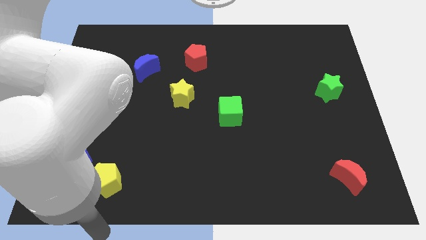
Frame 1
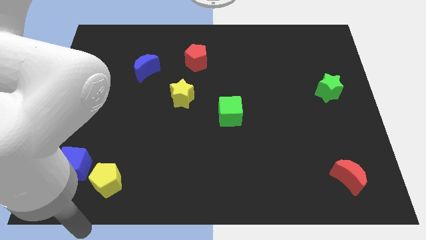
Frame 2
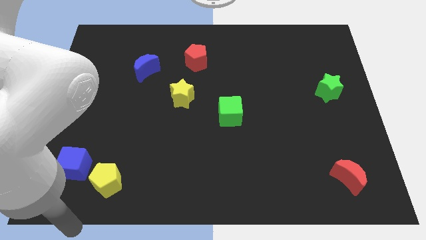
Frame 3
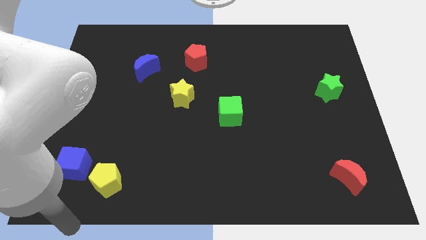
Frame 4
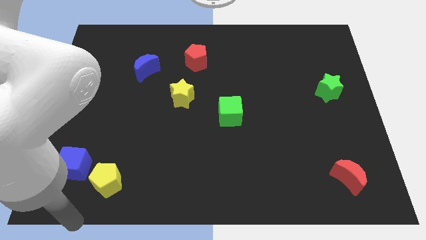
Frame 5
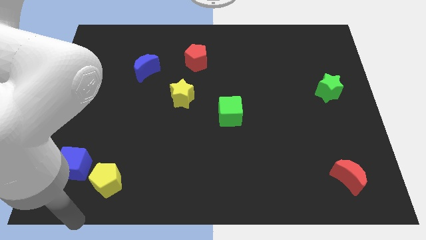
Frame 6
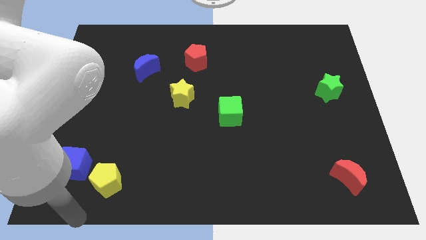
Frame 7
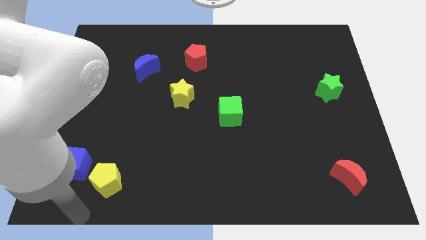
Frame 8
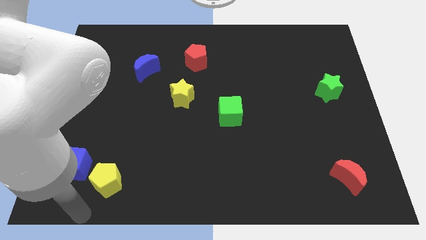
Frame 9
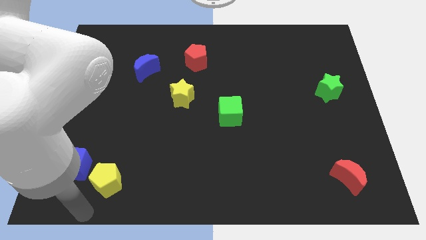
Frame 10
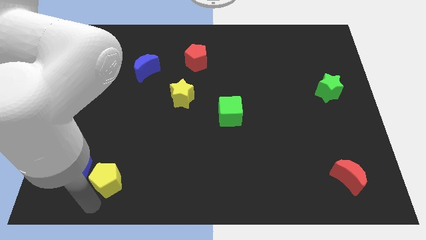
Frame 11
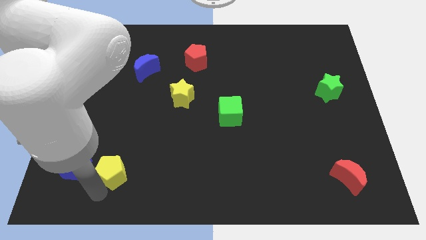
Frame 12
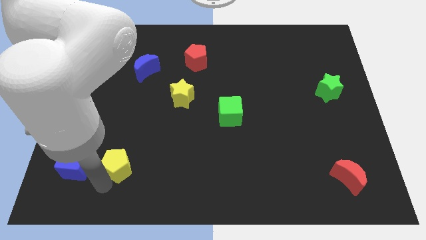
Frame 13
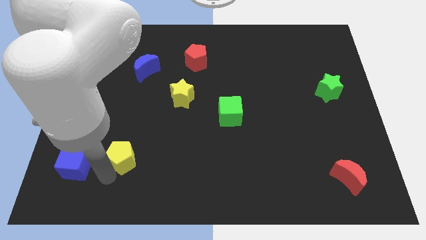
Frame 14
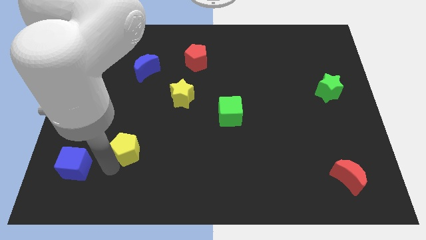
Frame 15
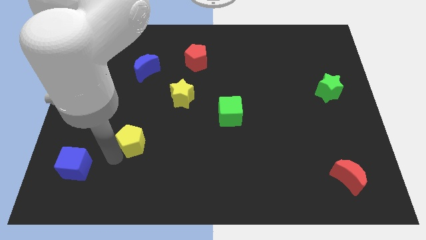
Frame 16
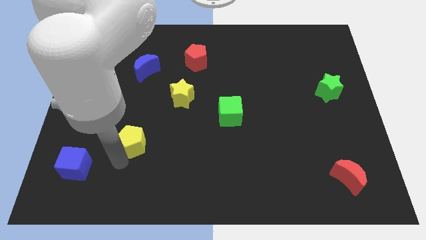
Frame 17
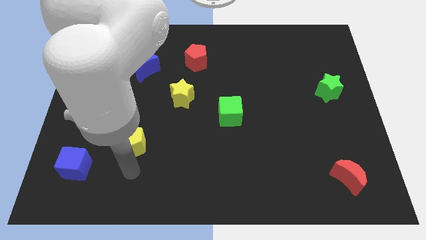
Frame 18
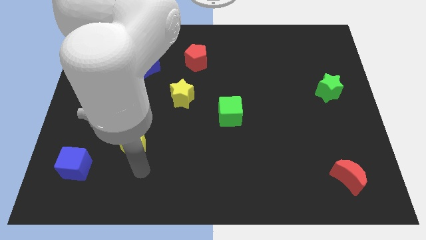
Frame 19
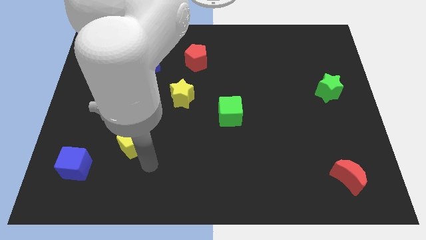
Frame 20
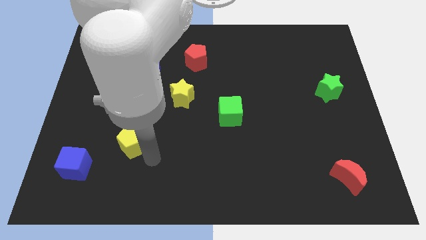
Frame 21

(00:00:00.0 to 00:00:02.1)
push the yellow pentagon towards up

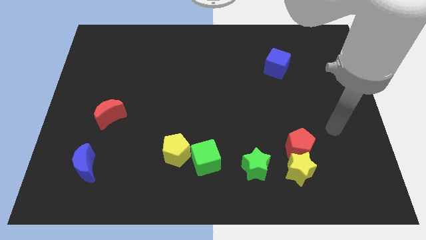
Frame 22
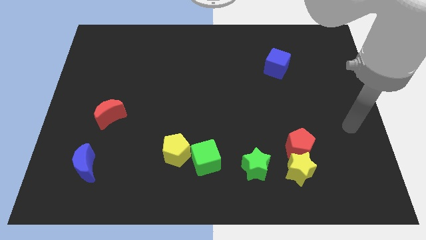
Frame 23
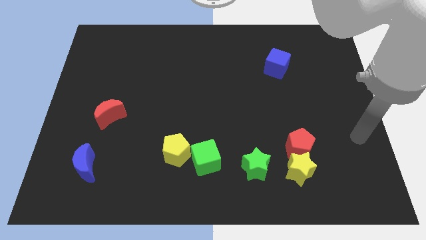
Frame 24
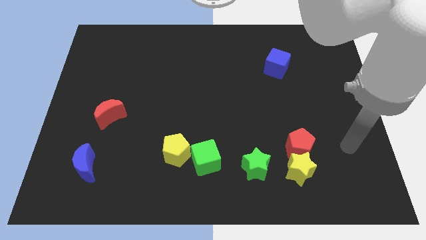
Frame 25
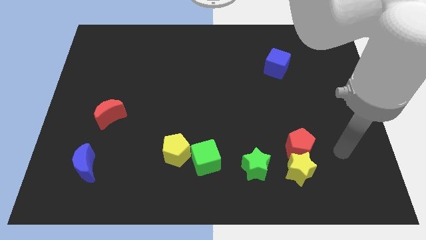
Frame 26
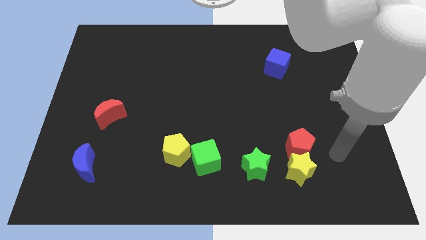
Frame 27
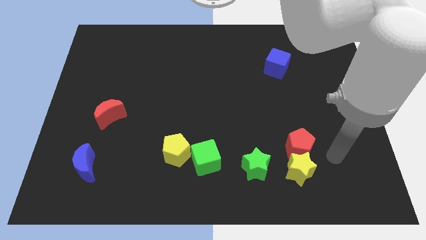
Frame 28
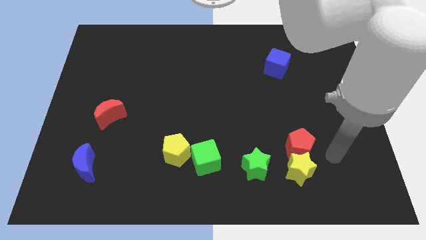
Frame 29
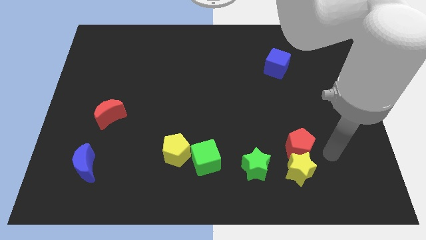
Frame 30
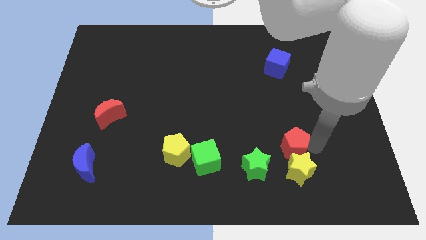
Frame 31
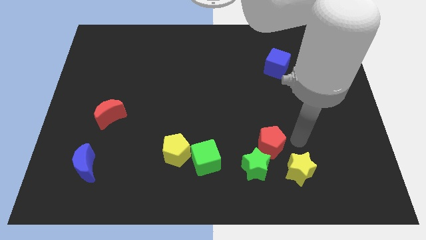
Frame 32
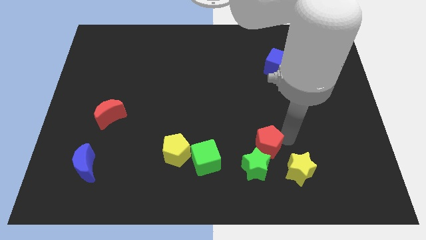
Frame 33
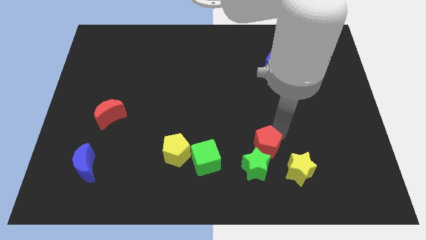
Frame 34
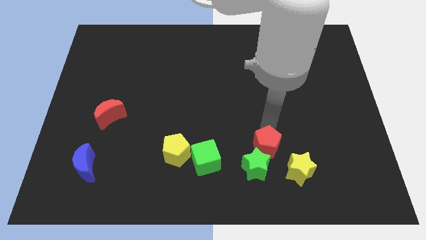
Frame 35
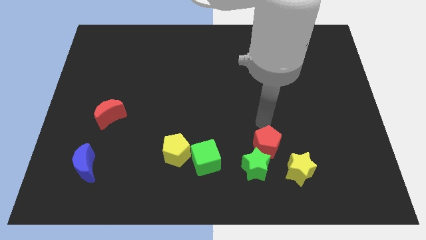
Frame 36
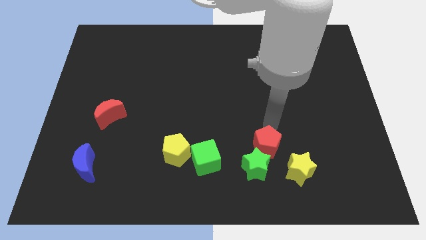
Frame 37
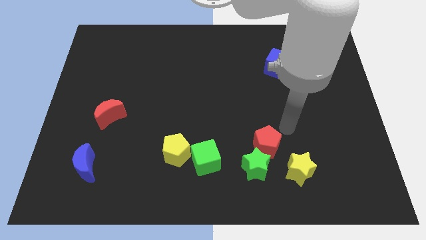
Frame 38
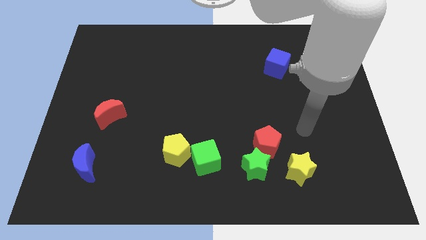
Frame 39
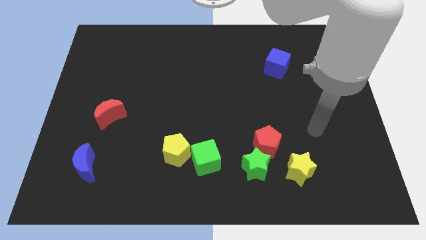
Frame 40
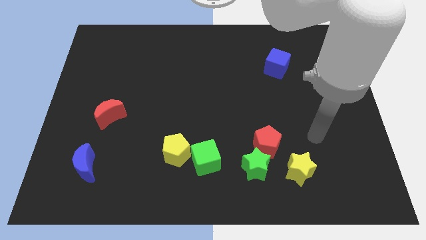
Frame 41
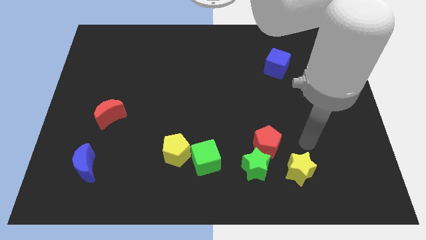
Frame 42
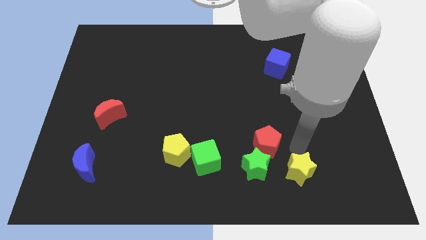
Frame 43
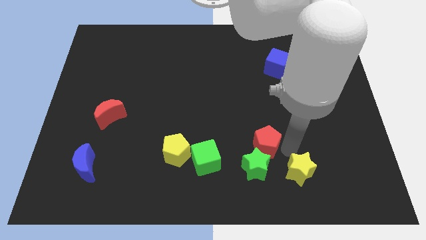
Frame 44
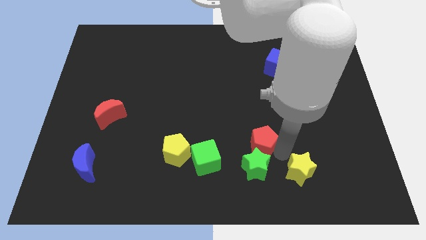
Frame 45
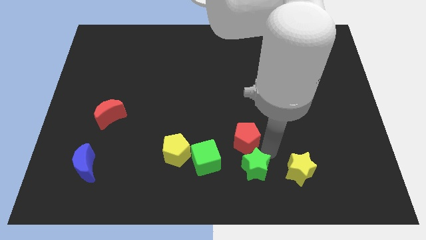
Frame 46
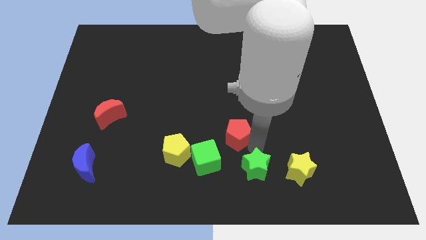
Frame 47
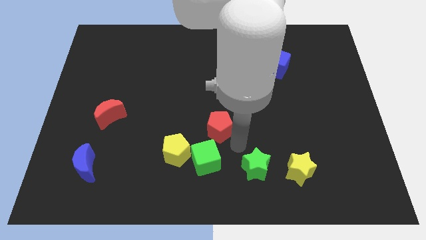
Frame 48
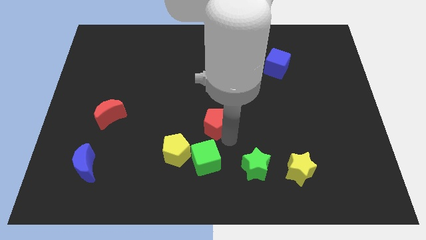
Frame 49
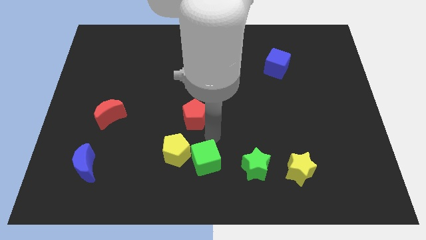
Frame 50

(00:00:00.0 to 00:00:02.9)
place the red pentagon above the green cube

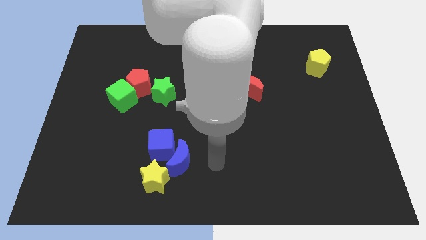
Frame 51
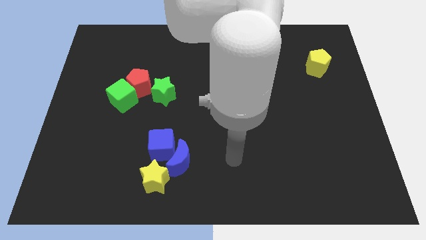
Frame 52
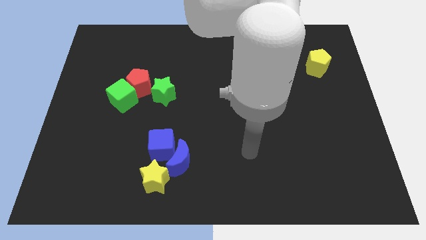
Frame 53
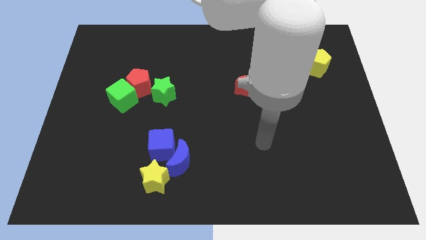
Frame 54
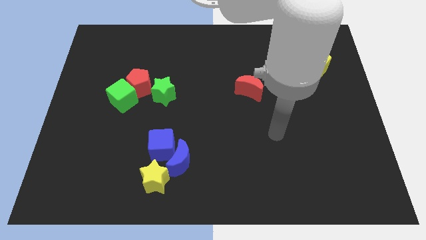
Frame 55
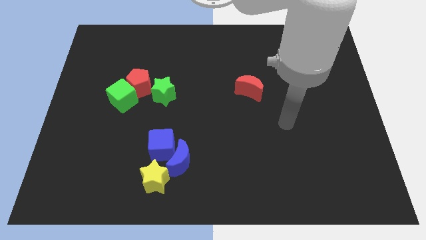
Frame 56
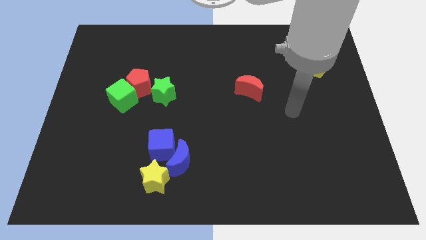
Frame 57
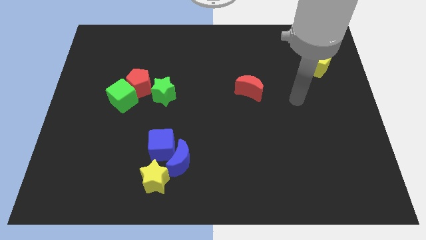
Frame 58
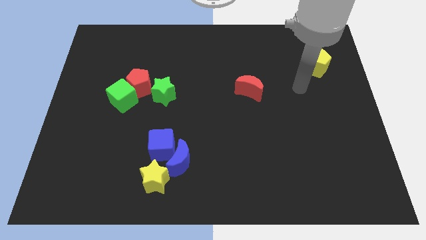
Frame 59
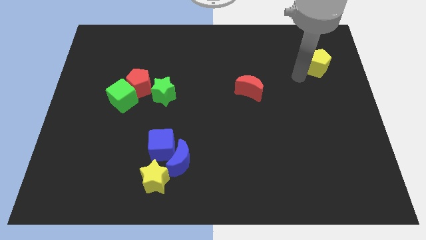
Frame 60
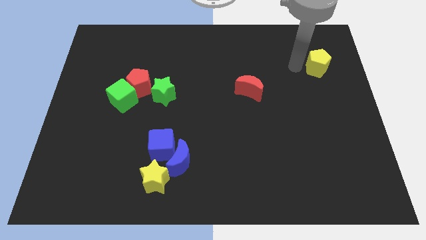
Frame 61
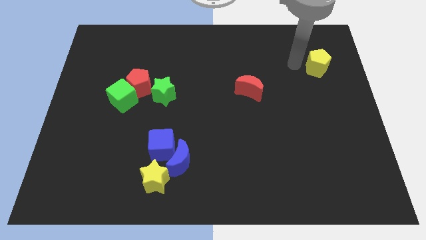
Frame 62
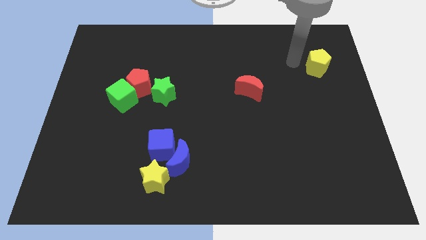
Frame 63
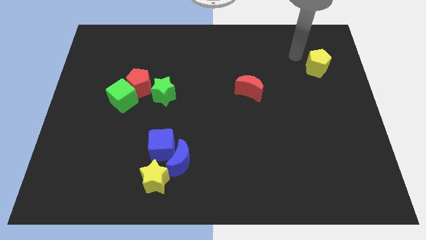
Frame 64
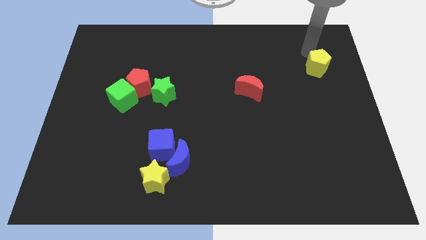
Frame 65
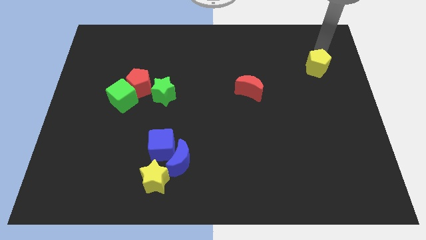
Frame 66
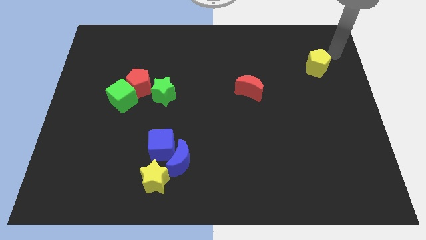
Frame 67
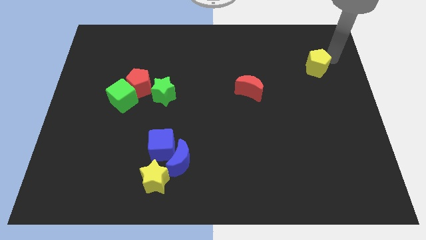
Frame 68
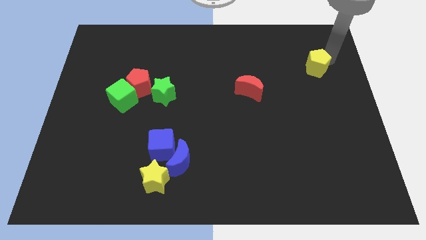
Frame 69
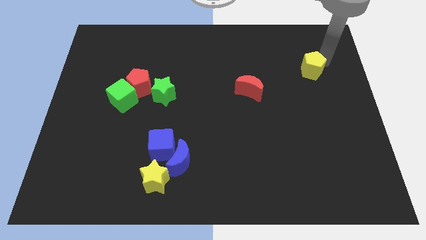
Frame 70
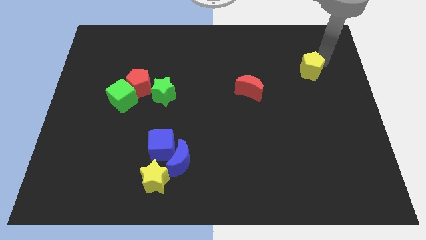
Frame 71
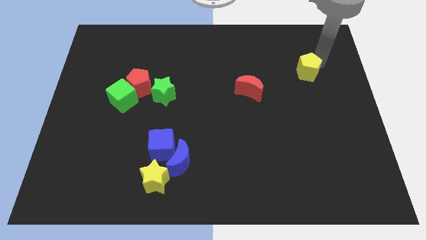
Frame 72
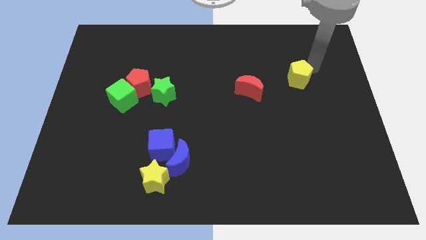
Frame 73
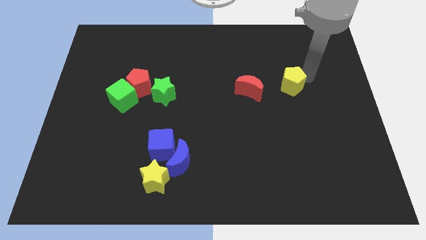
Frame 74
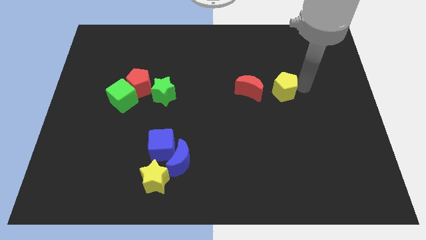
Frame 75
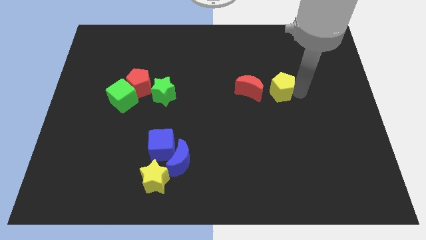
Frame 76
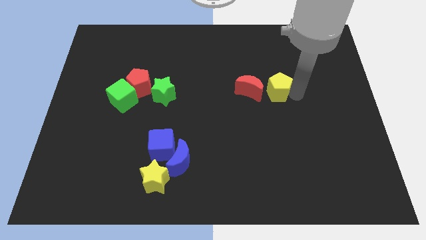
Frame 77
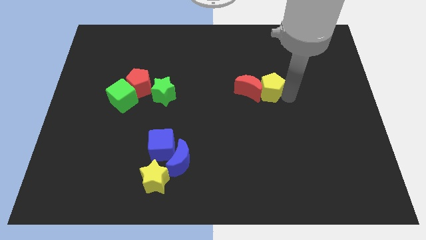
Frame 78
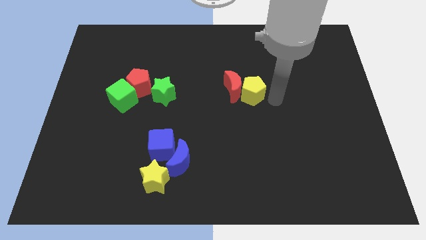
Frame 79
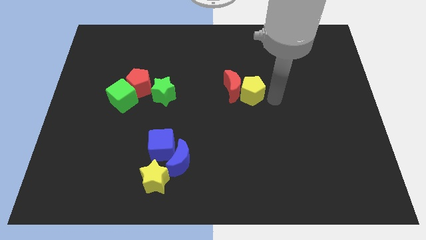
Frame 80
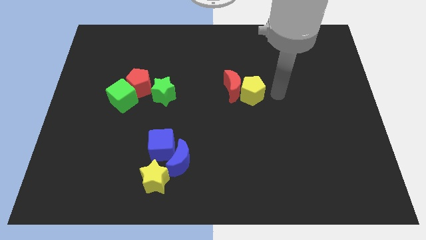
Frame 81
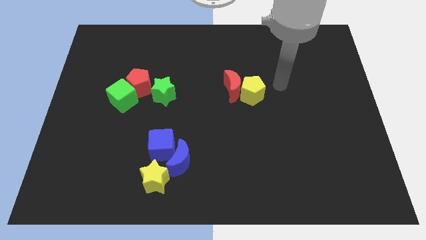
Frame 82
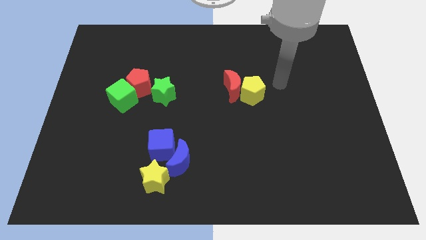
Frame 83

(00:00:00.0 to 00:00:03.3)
push the yellow pentagon into the red crescent

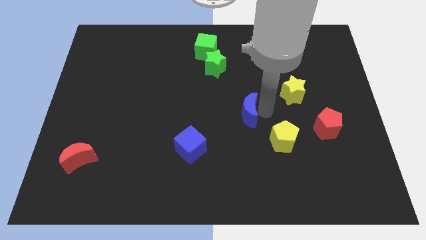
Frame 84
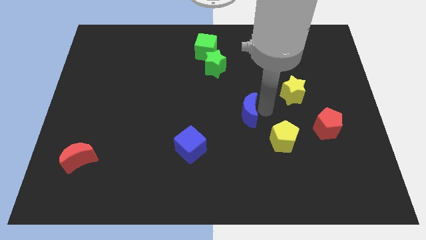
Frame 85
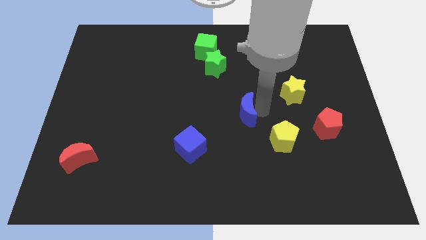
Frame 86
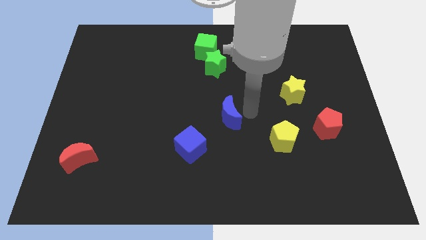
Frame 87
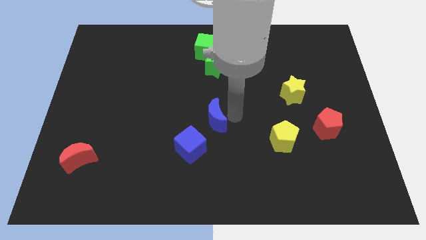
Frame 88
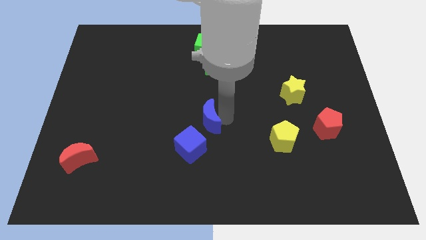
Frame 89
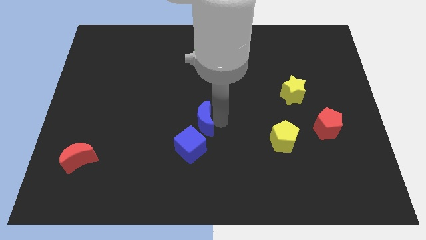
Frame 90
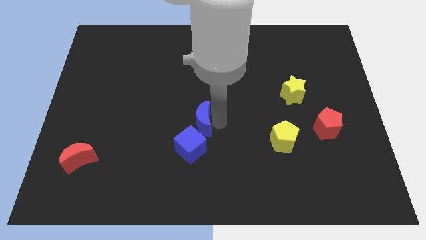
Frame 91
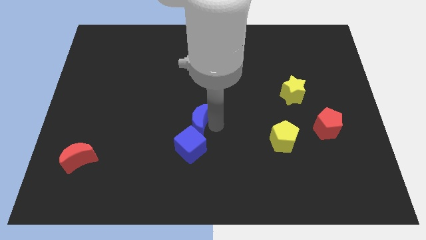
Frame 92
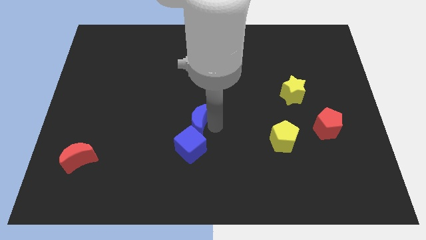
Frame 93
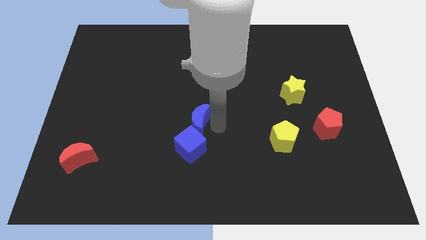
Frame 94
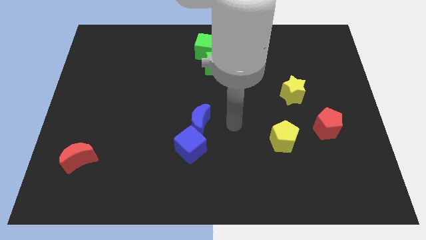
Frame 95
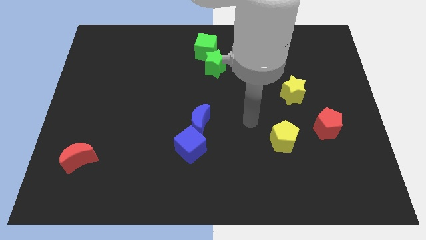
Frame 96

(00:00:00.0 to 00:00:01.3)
move the blue crescent close to blue cube
